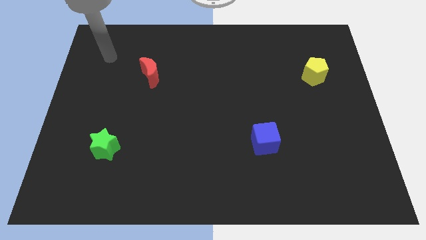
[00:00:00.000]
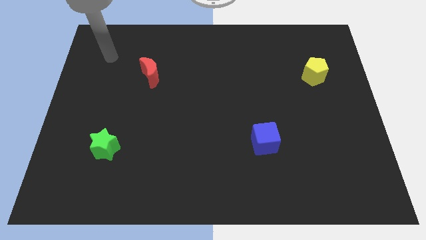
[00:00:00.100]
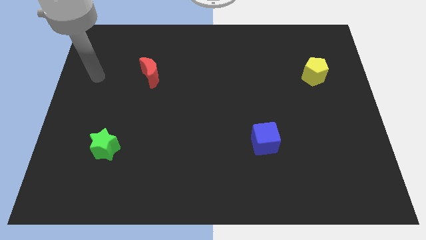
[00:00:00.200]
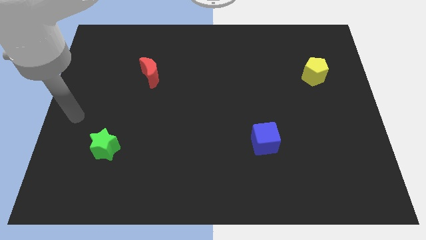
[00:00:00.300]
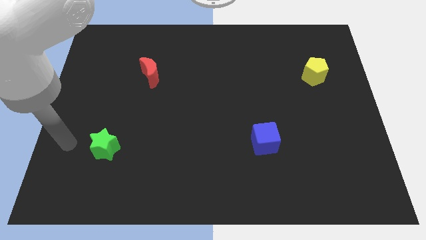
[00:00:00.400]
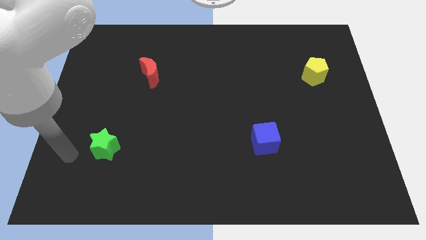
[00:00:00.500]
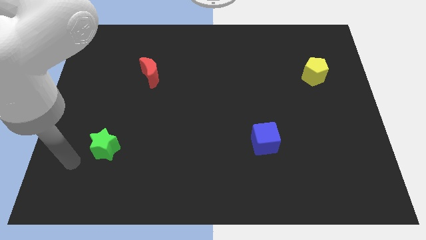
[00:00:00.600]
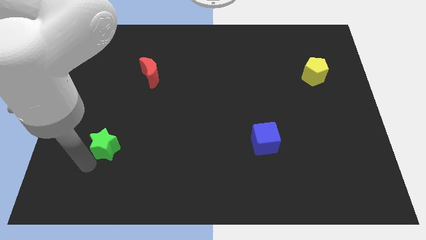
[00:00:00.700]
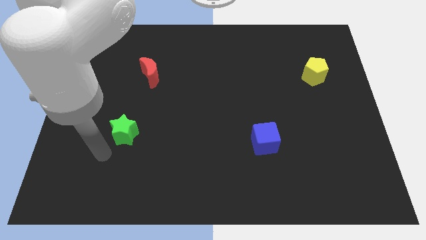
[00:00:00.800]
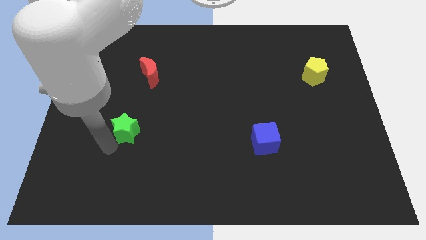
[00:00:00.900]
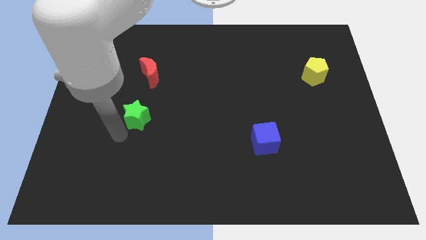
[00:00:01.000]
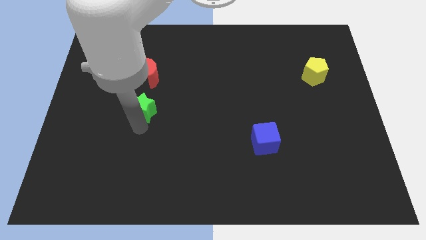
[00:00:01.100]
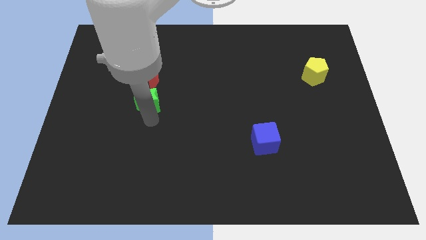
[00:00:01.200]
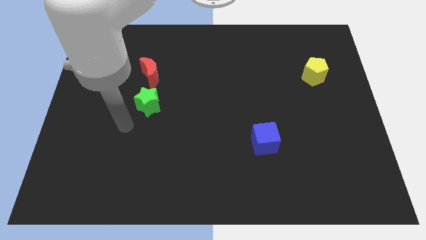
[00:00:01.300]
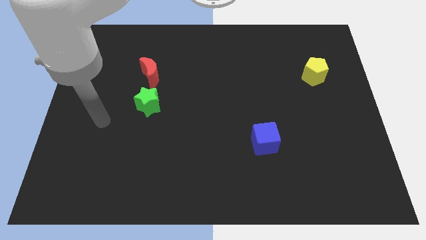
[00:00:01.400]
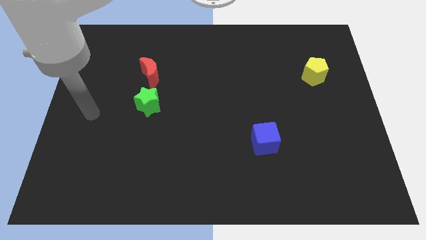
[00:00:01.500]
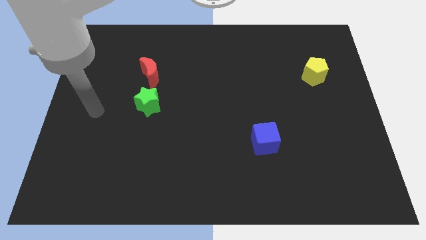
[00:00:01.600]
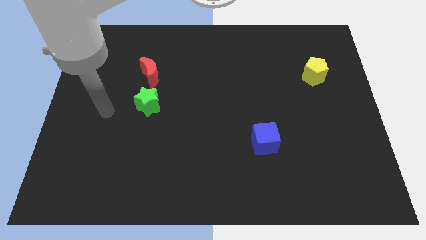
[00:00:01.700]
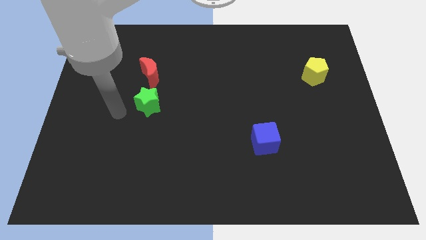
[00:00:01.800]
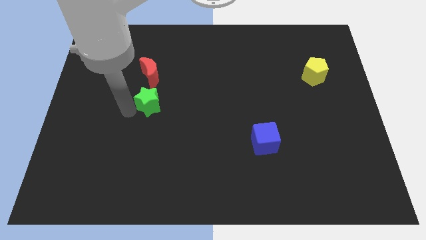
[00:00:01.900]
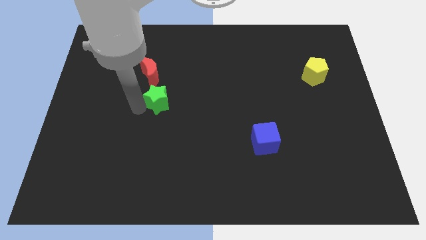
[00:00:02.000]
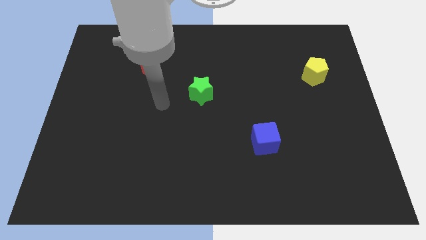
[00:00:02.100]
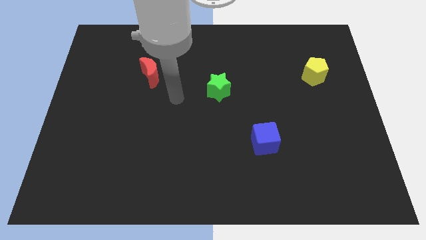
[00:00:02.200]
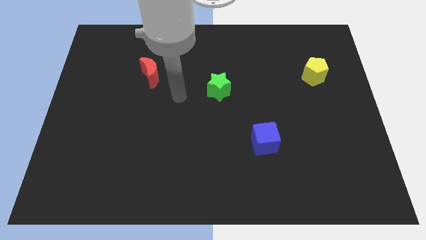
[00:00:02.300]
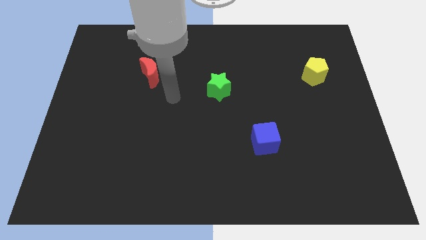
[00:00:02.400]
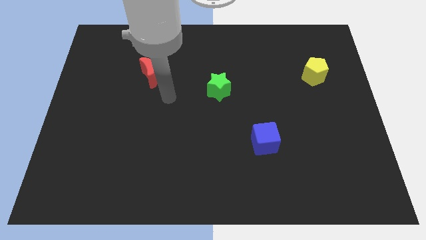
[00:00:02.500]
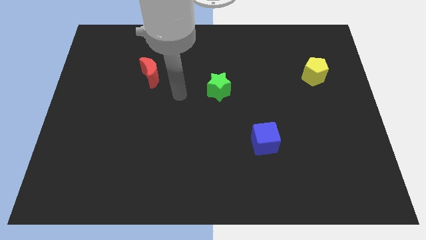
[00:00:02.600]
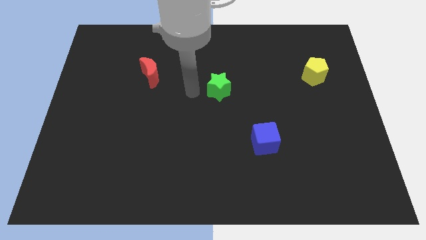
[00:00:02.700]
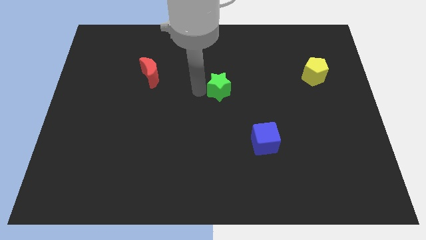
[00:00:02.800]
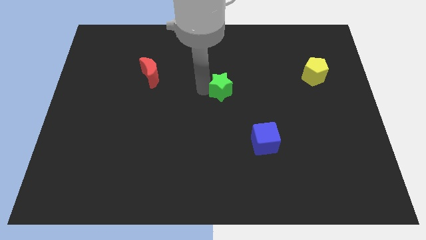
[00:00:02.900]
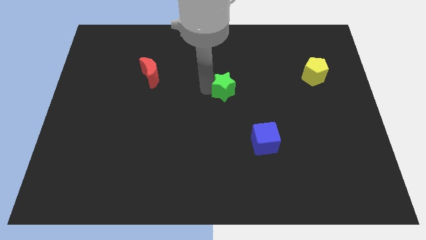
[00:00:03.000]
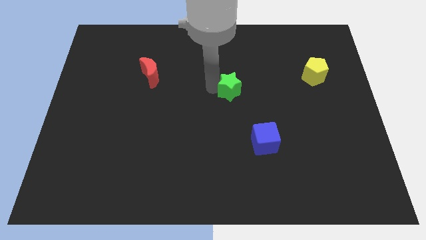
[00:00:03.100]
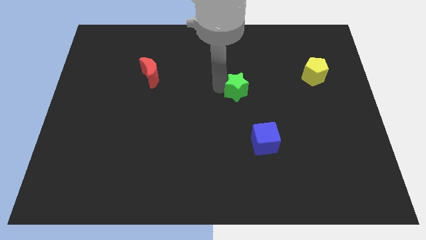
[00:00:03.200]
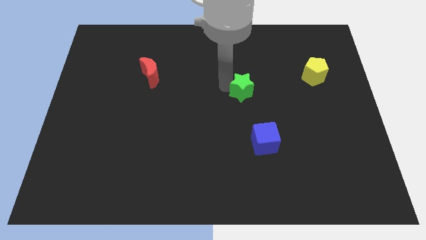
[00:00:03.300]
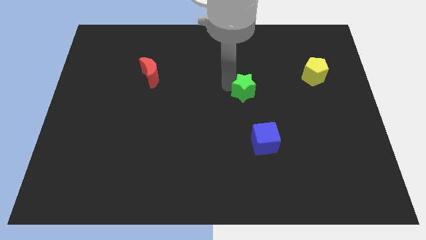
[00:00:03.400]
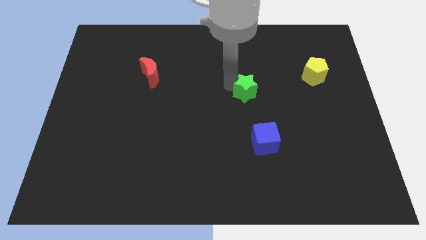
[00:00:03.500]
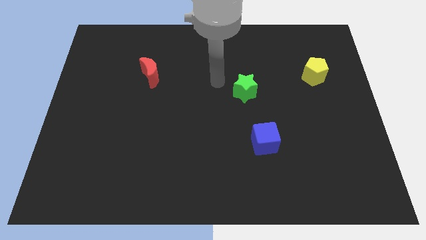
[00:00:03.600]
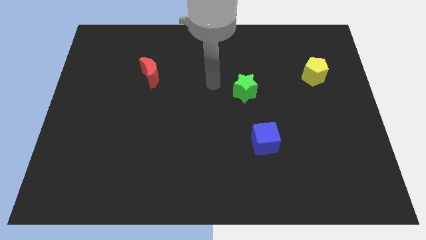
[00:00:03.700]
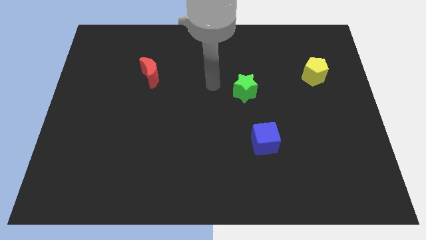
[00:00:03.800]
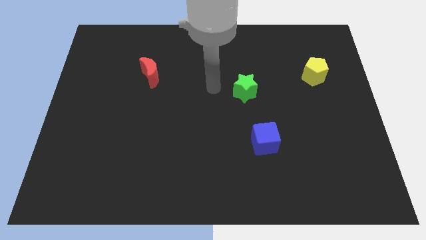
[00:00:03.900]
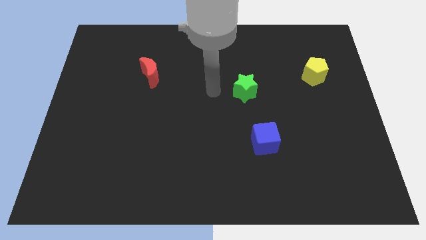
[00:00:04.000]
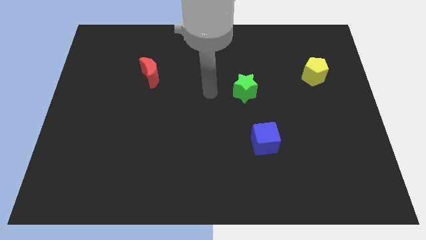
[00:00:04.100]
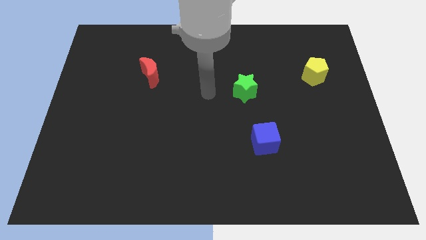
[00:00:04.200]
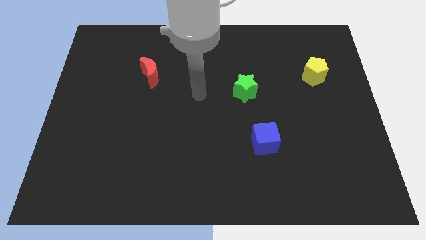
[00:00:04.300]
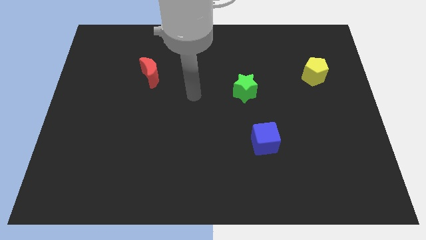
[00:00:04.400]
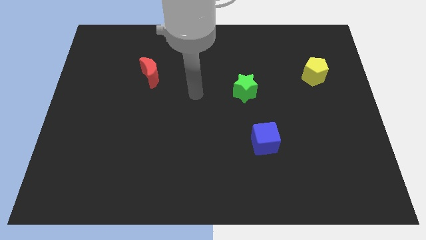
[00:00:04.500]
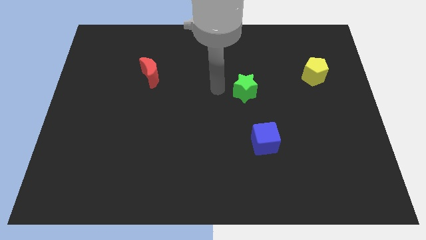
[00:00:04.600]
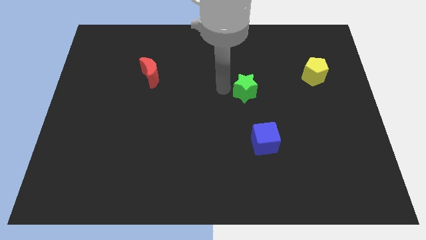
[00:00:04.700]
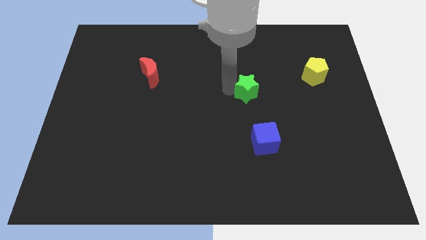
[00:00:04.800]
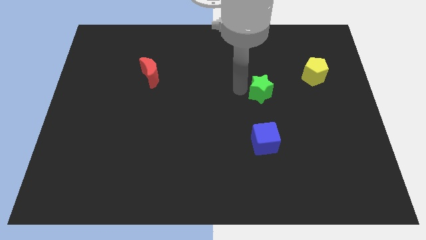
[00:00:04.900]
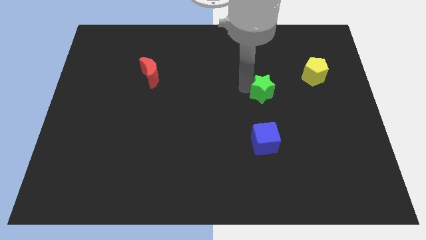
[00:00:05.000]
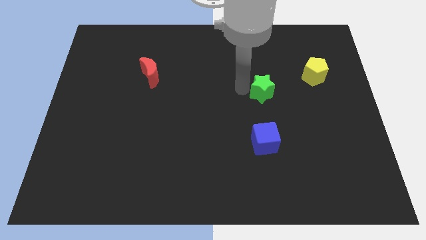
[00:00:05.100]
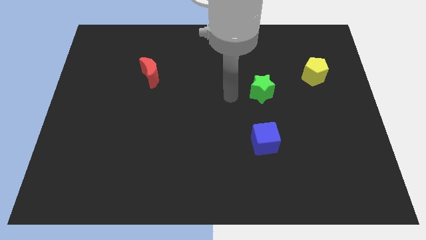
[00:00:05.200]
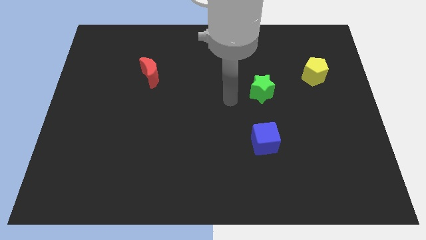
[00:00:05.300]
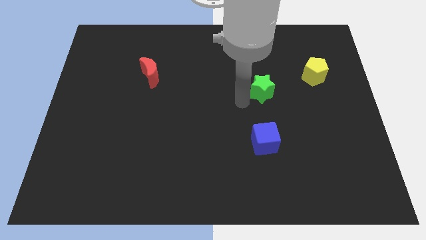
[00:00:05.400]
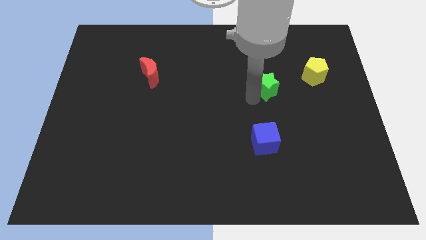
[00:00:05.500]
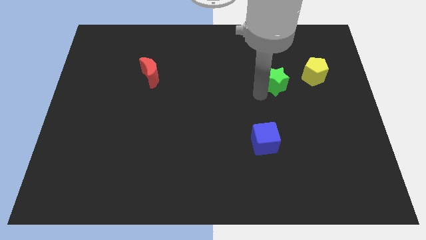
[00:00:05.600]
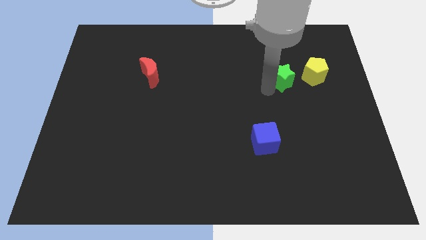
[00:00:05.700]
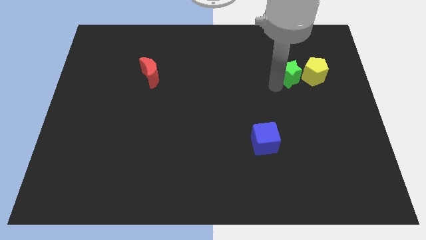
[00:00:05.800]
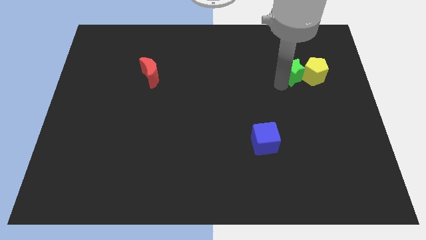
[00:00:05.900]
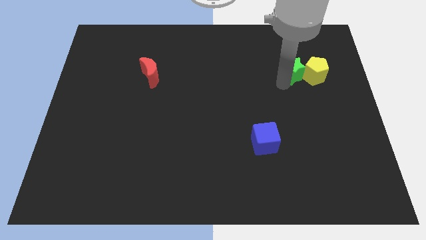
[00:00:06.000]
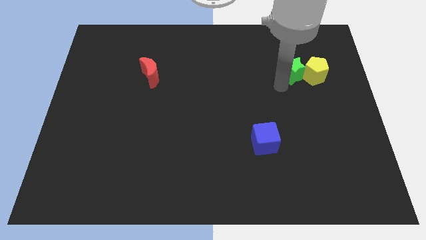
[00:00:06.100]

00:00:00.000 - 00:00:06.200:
put the green star towards the yellow pentagon

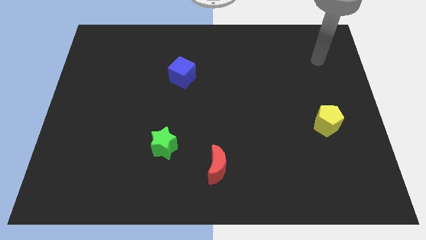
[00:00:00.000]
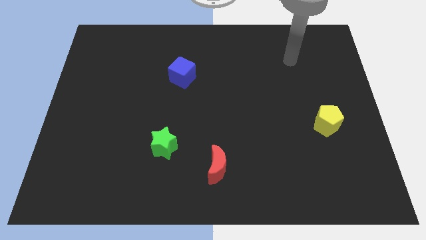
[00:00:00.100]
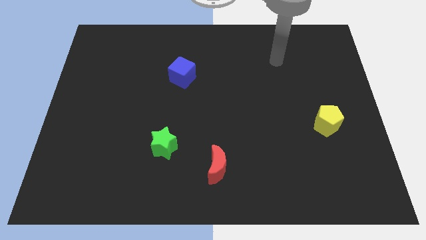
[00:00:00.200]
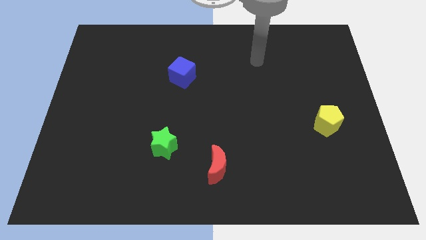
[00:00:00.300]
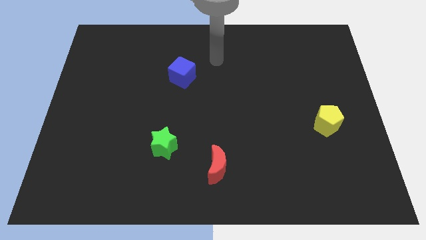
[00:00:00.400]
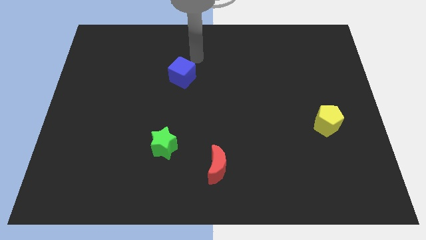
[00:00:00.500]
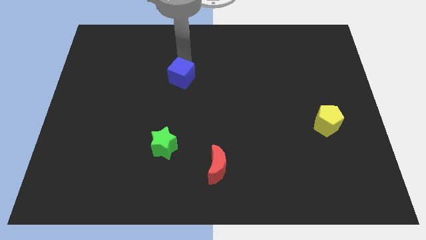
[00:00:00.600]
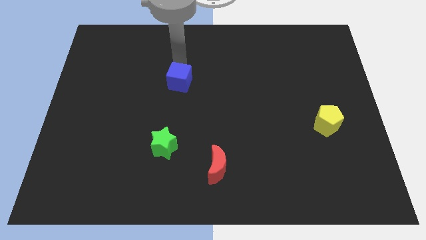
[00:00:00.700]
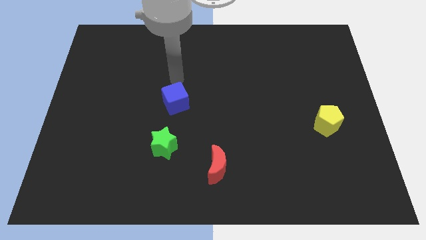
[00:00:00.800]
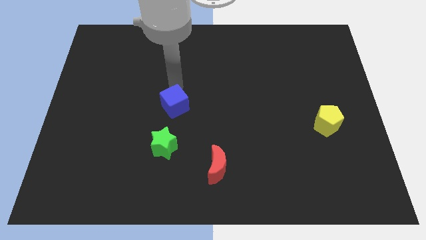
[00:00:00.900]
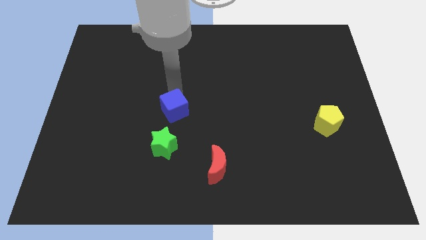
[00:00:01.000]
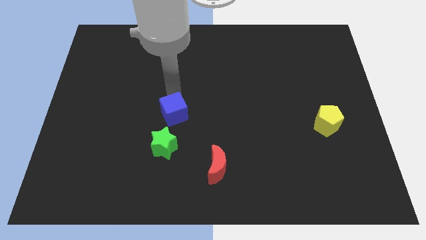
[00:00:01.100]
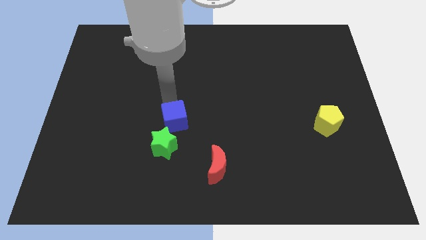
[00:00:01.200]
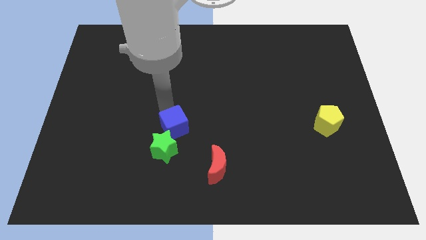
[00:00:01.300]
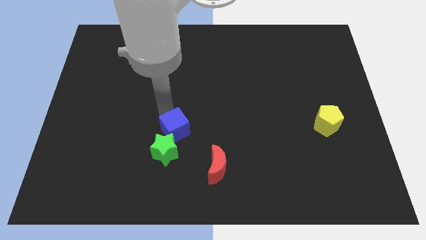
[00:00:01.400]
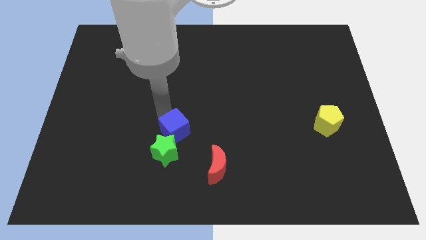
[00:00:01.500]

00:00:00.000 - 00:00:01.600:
put the blue block towards the green block

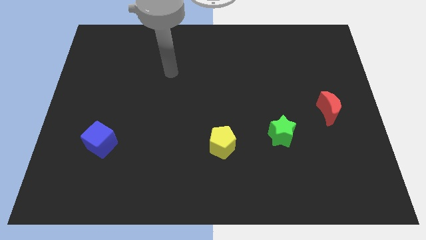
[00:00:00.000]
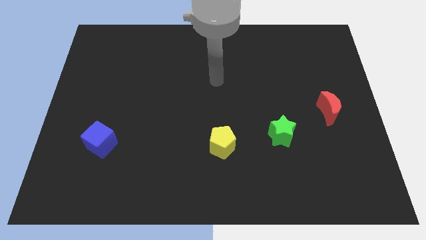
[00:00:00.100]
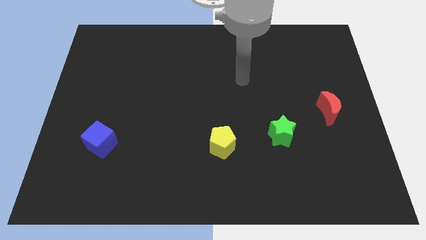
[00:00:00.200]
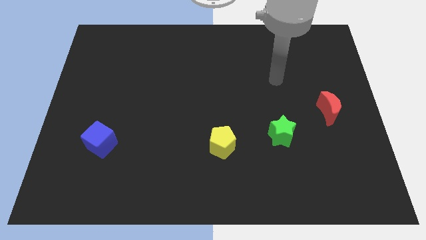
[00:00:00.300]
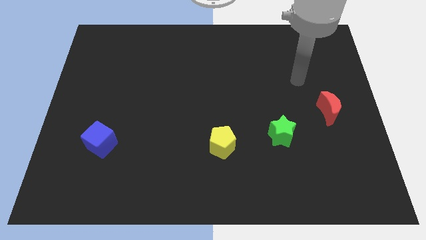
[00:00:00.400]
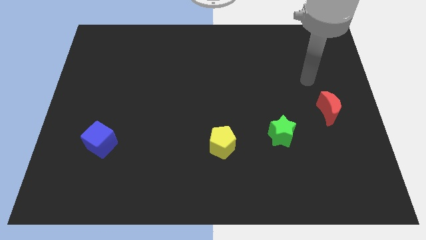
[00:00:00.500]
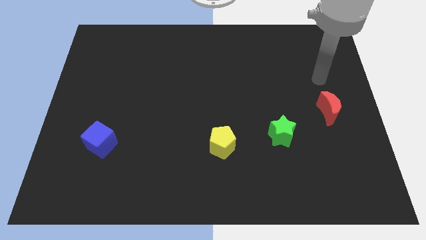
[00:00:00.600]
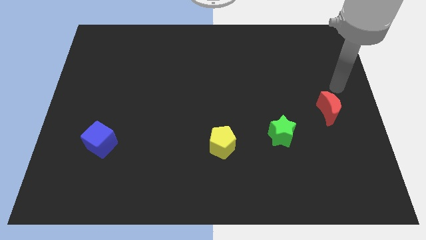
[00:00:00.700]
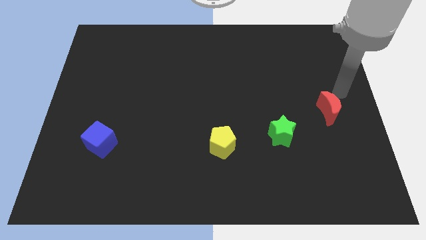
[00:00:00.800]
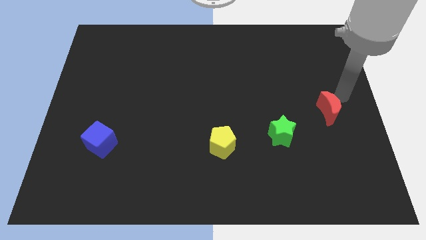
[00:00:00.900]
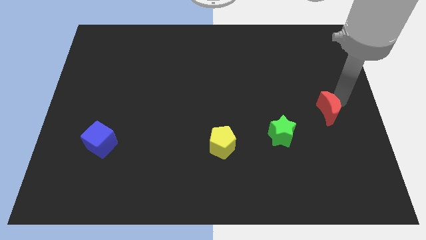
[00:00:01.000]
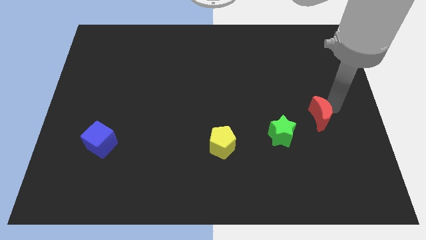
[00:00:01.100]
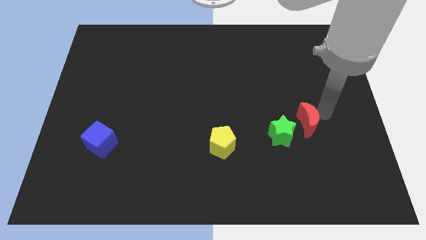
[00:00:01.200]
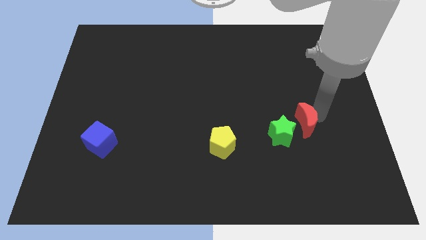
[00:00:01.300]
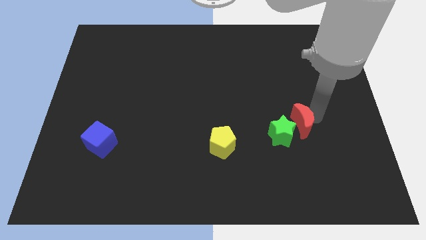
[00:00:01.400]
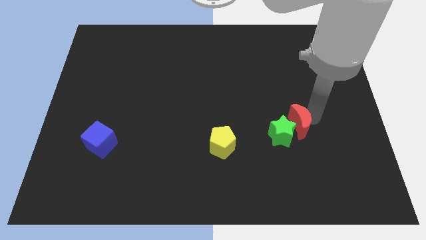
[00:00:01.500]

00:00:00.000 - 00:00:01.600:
slide the moon towards the star
